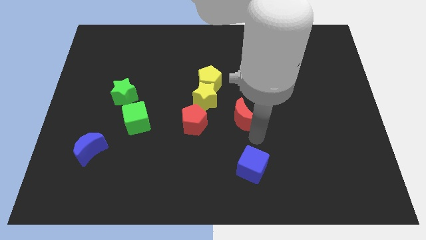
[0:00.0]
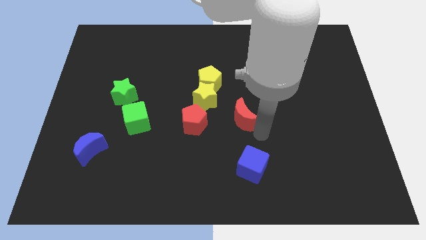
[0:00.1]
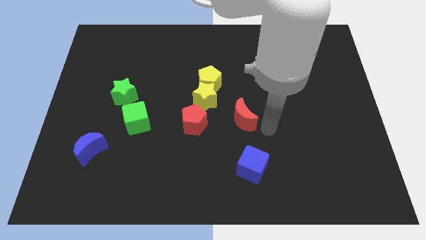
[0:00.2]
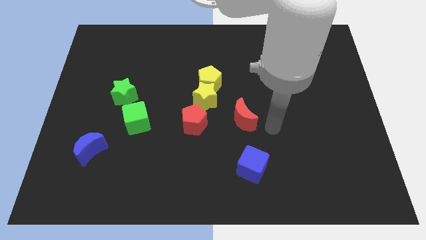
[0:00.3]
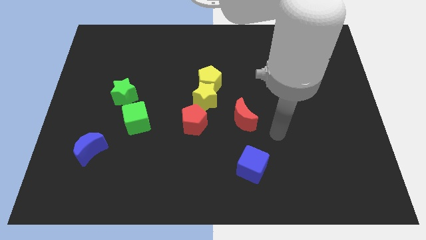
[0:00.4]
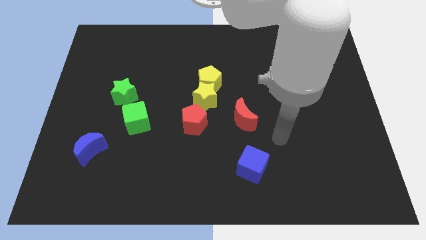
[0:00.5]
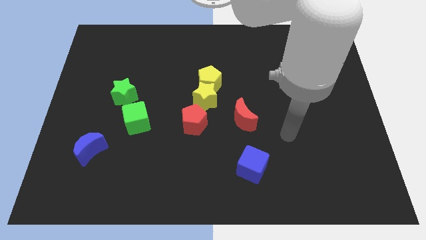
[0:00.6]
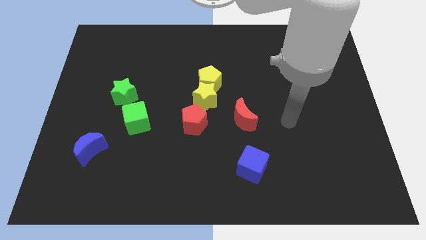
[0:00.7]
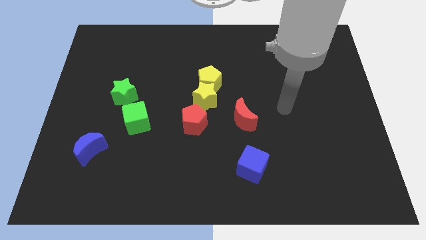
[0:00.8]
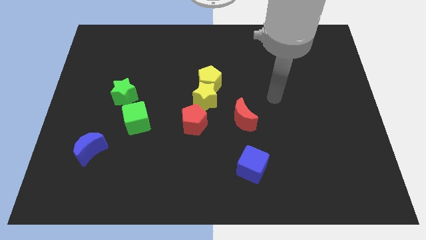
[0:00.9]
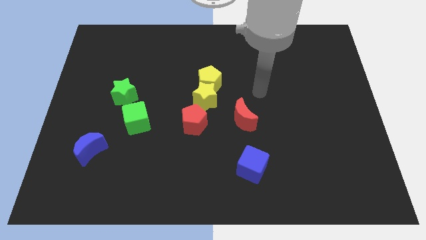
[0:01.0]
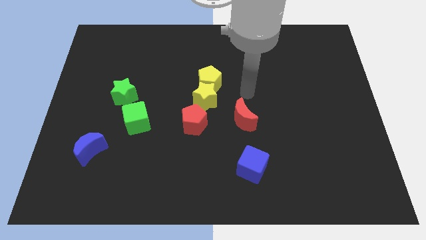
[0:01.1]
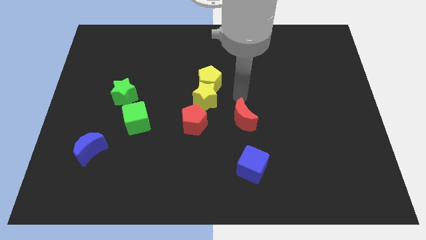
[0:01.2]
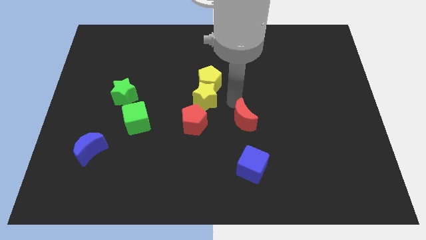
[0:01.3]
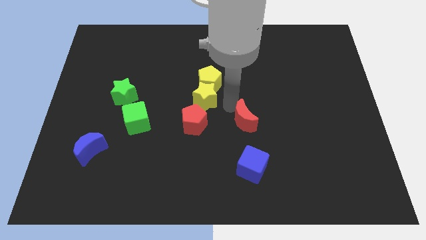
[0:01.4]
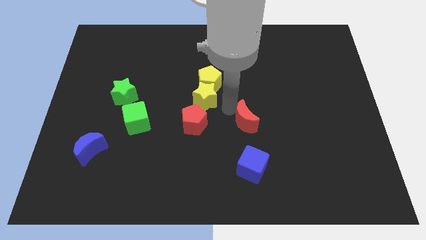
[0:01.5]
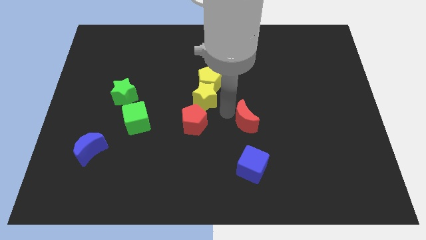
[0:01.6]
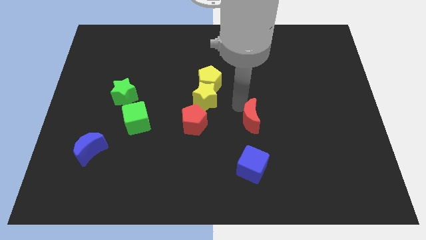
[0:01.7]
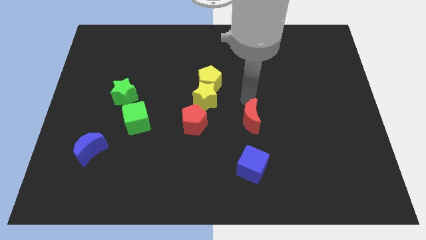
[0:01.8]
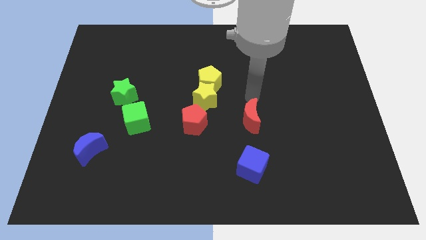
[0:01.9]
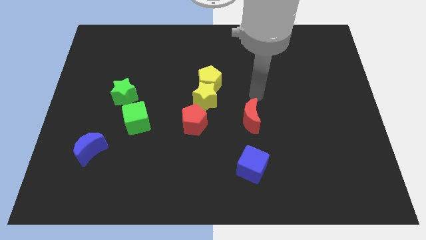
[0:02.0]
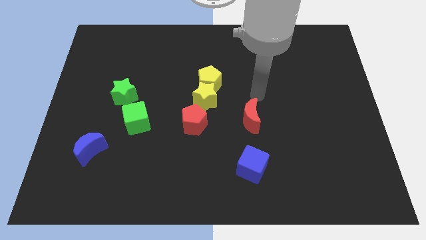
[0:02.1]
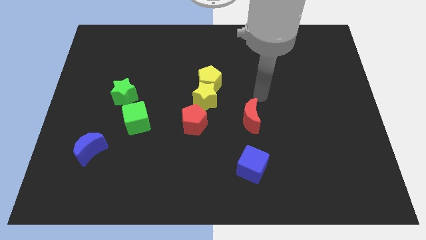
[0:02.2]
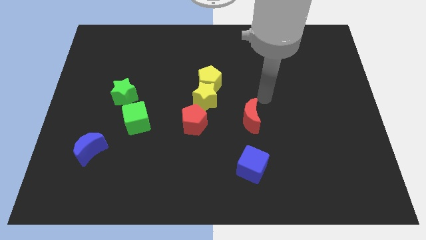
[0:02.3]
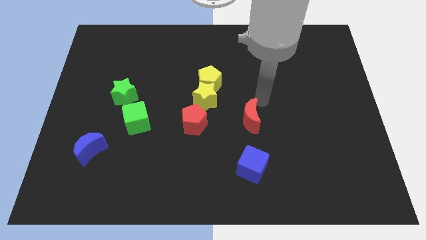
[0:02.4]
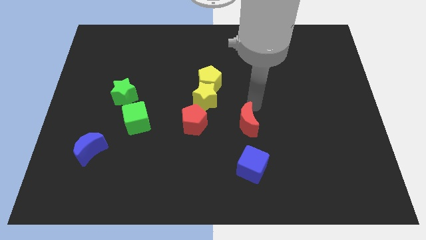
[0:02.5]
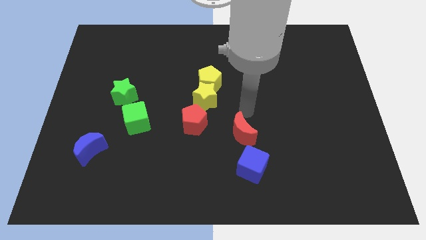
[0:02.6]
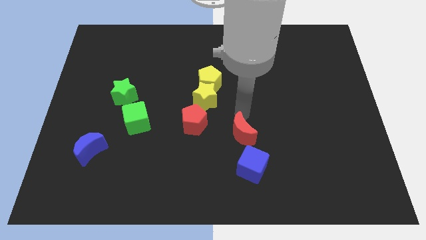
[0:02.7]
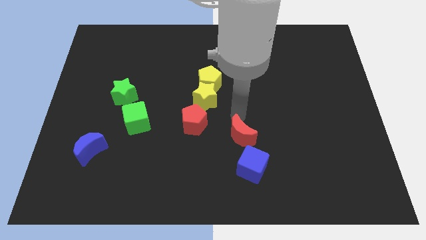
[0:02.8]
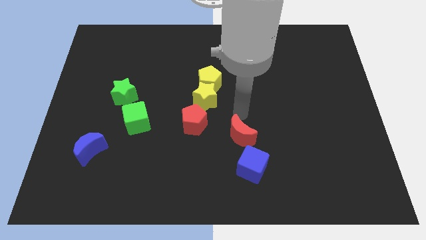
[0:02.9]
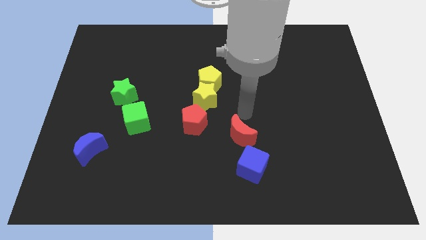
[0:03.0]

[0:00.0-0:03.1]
move the red moon to the top side of the blue cube

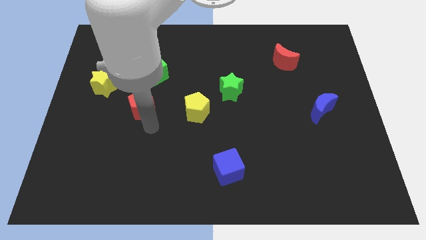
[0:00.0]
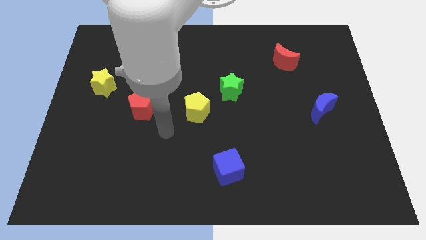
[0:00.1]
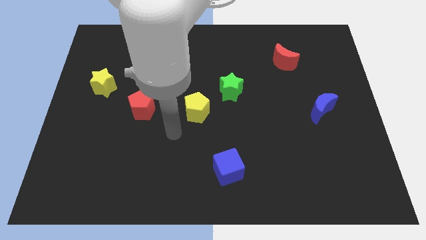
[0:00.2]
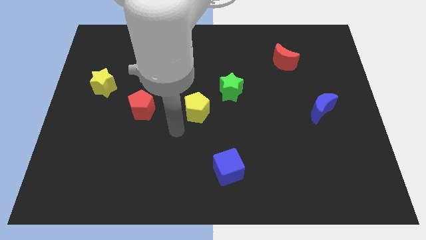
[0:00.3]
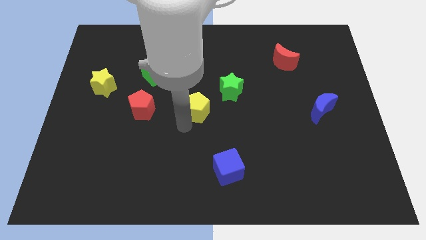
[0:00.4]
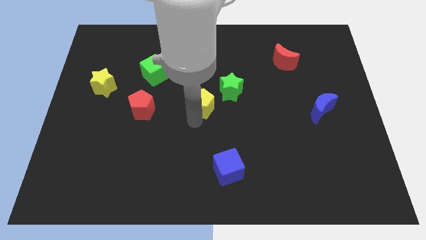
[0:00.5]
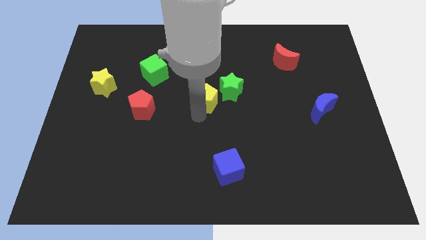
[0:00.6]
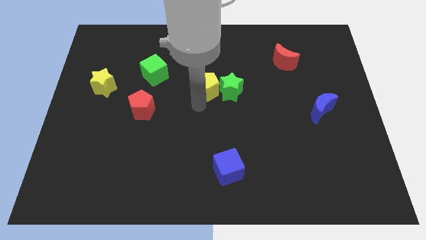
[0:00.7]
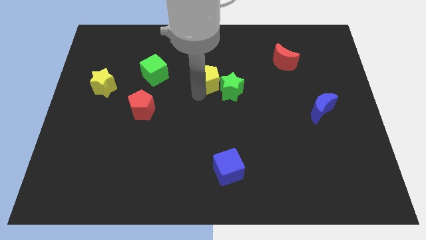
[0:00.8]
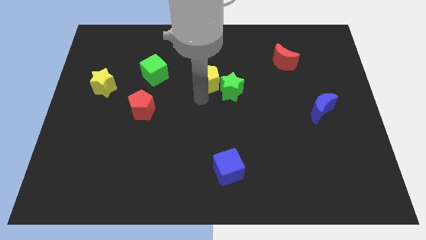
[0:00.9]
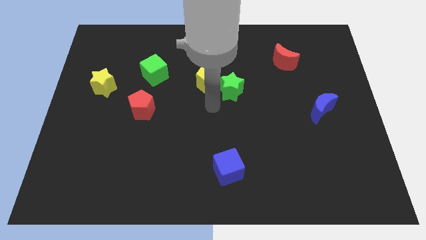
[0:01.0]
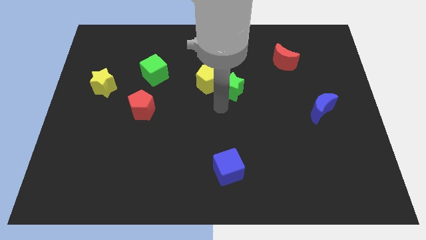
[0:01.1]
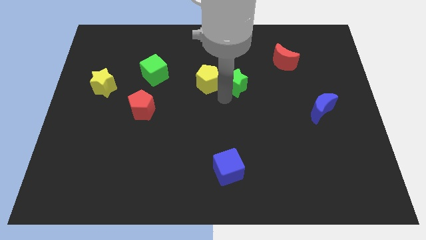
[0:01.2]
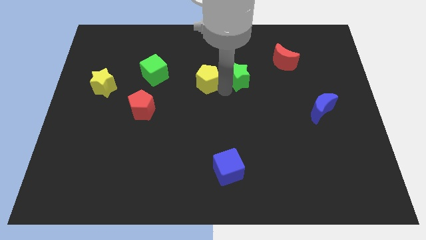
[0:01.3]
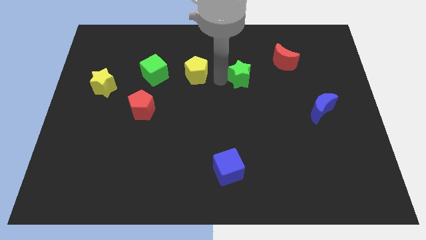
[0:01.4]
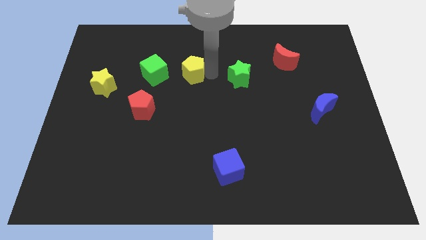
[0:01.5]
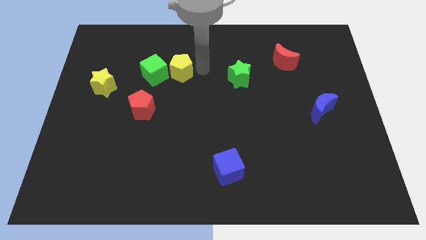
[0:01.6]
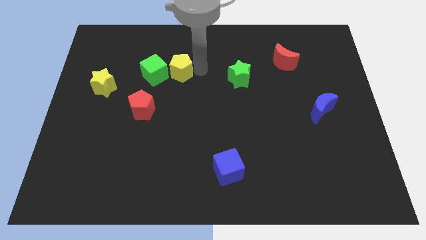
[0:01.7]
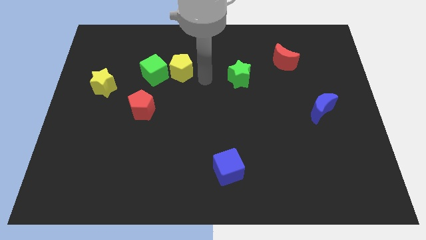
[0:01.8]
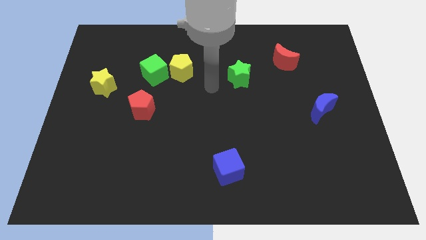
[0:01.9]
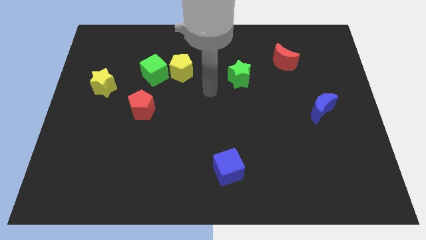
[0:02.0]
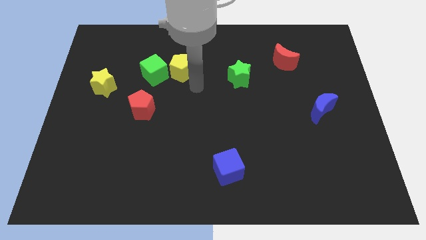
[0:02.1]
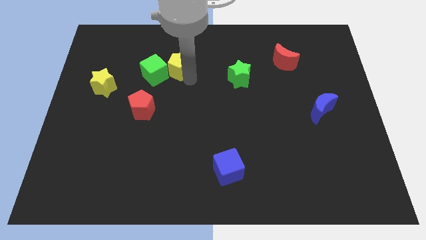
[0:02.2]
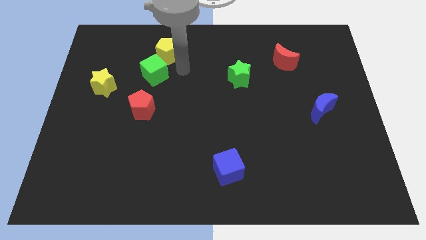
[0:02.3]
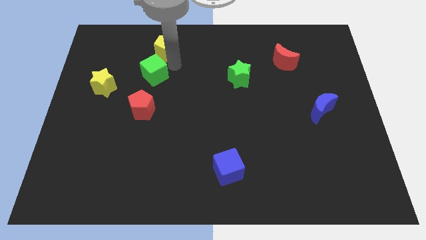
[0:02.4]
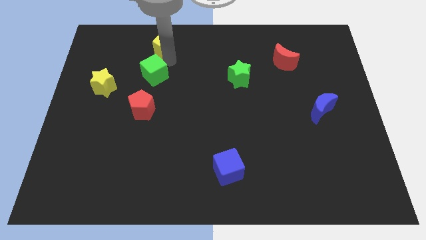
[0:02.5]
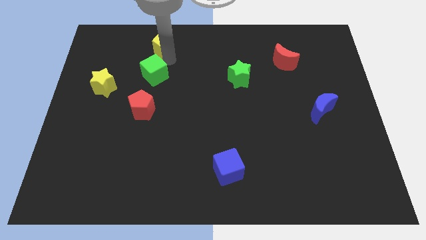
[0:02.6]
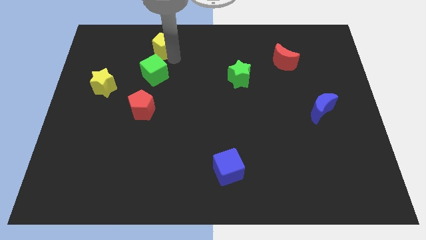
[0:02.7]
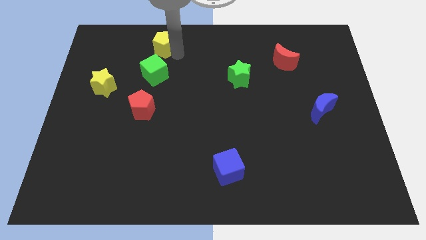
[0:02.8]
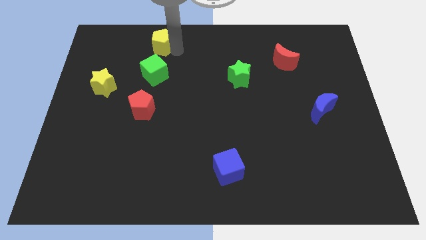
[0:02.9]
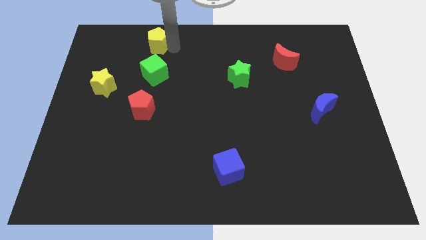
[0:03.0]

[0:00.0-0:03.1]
place the yellow pentagon above the green cube

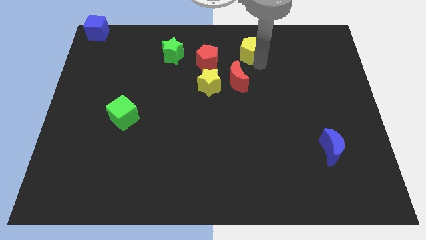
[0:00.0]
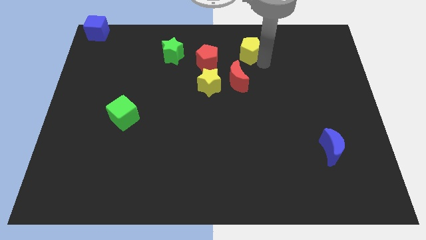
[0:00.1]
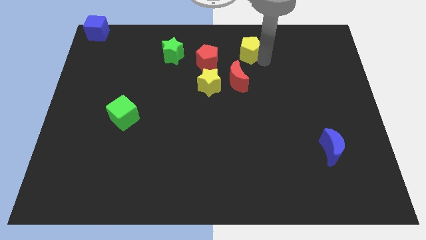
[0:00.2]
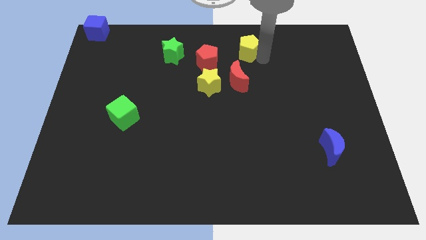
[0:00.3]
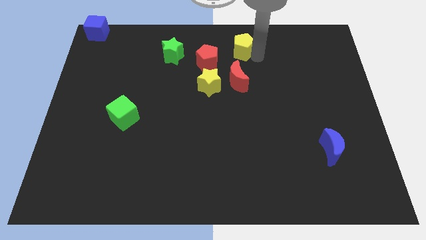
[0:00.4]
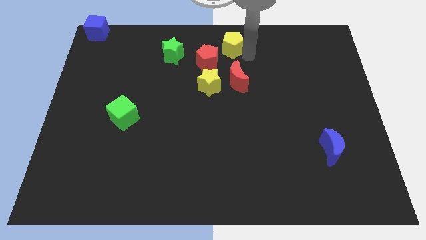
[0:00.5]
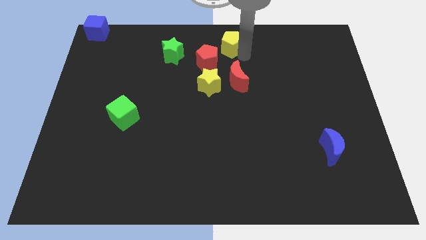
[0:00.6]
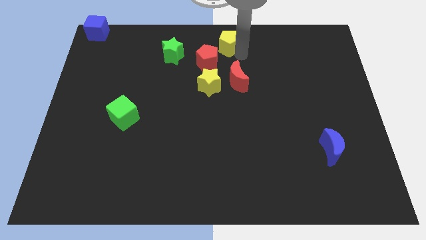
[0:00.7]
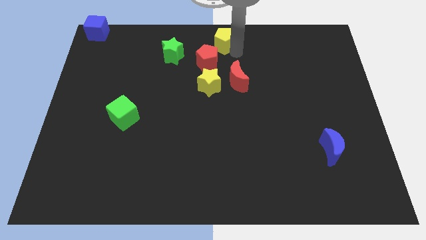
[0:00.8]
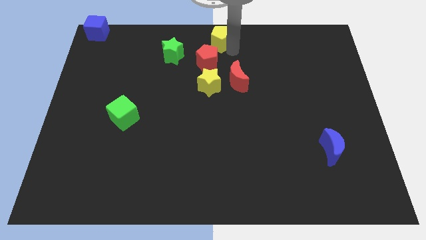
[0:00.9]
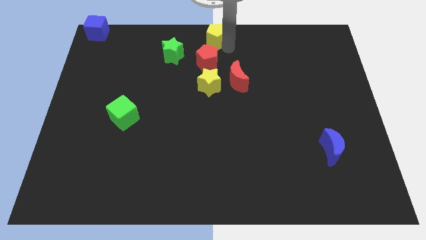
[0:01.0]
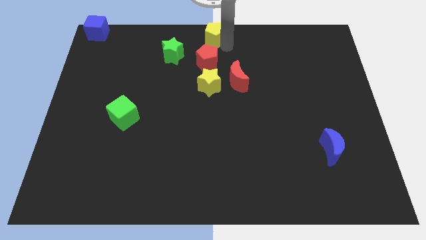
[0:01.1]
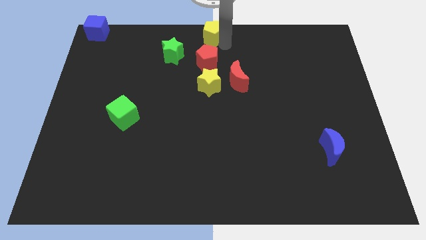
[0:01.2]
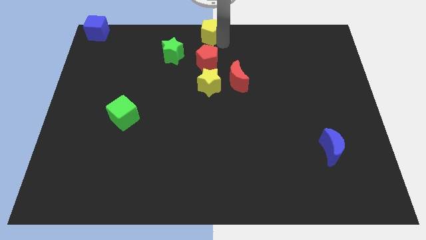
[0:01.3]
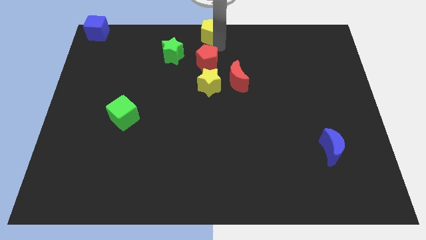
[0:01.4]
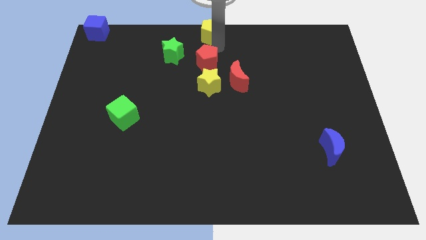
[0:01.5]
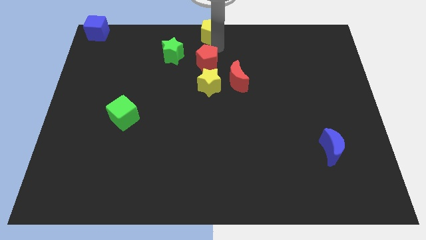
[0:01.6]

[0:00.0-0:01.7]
move the yellow pentagon to the top center

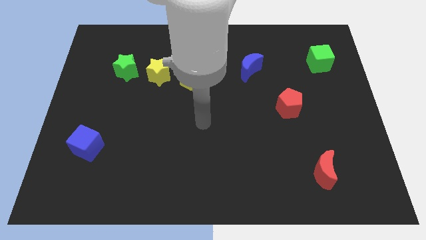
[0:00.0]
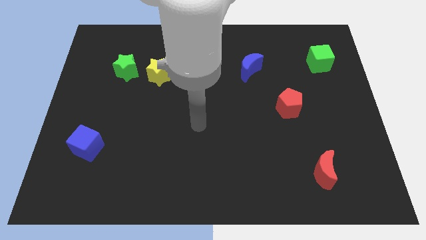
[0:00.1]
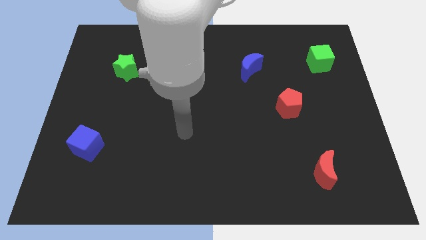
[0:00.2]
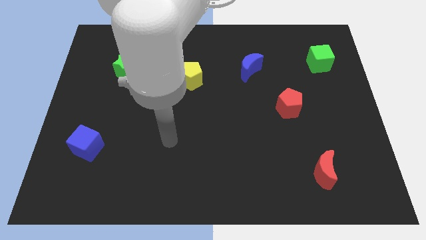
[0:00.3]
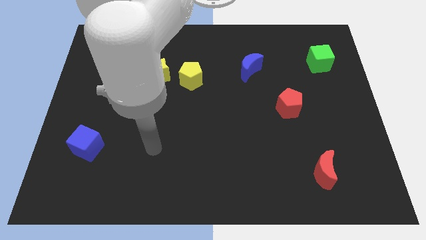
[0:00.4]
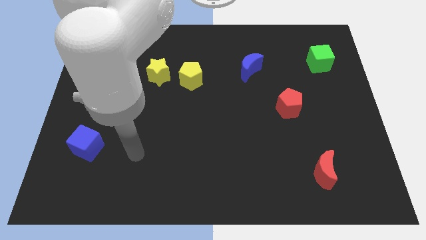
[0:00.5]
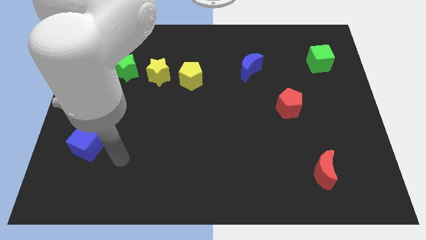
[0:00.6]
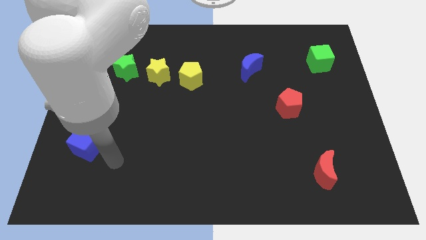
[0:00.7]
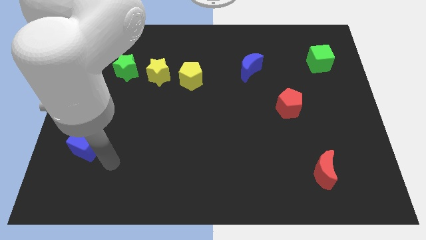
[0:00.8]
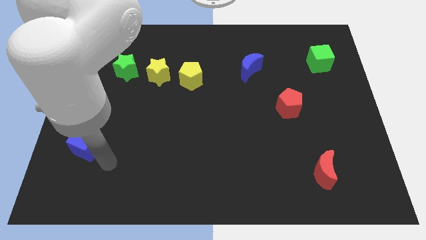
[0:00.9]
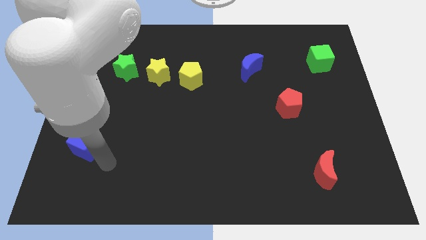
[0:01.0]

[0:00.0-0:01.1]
slide your arm to the bottom right of blue cube

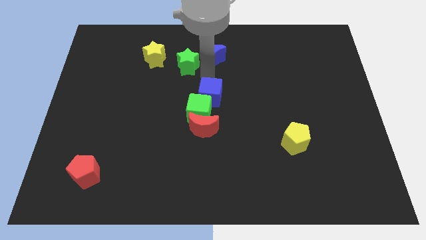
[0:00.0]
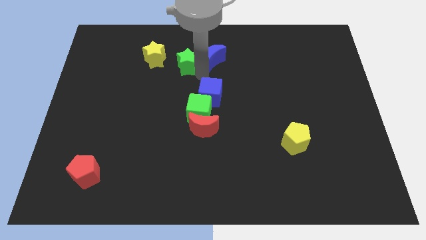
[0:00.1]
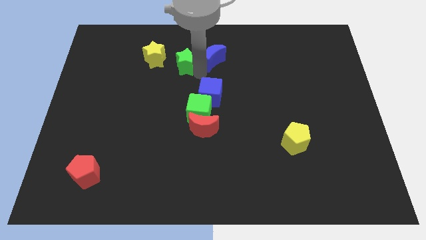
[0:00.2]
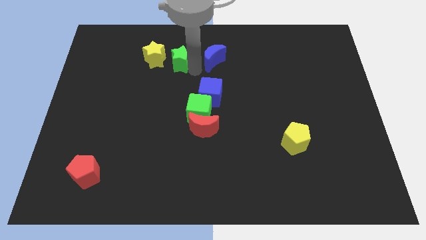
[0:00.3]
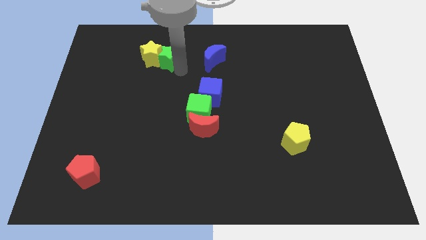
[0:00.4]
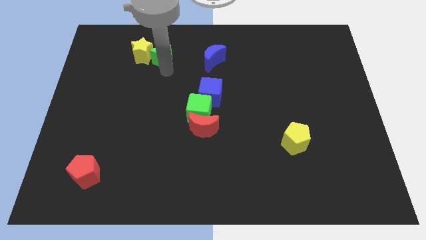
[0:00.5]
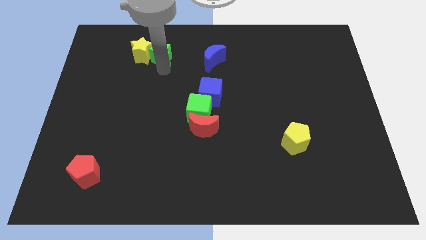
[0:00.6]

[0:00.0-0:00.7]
move the green star into the yellow star
